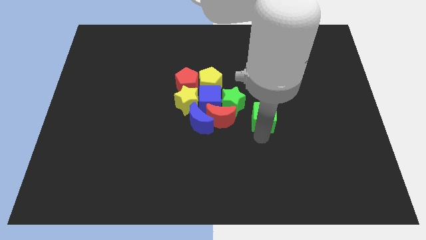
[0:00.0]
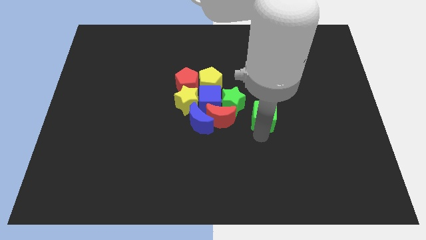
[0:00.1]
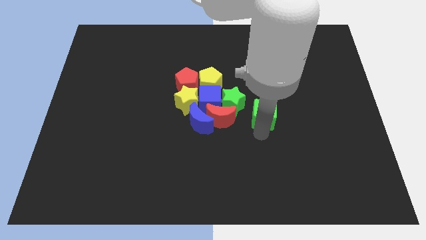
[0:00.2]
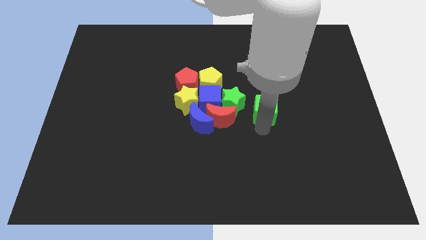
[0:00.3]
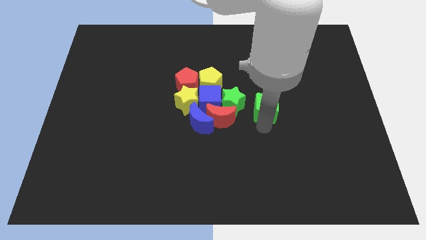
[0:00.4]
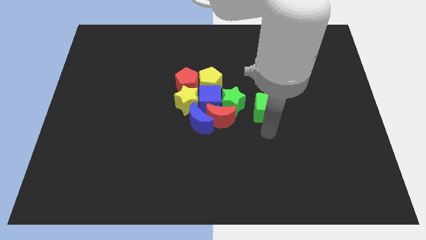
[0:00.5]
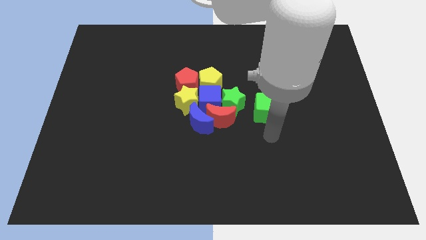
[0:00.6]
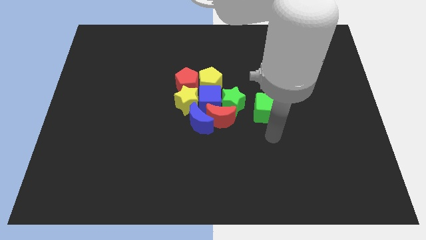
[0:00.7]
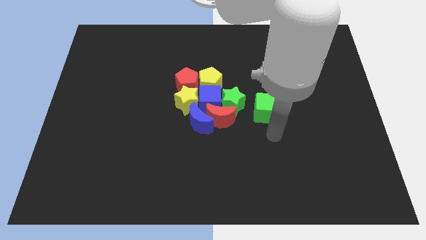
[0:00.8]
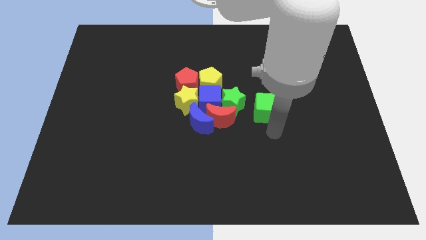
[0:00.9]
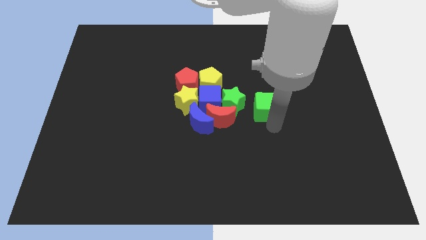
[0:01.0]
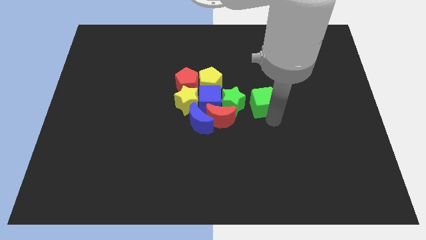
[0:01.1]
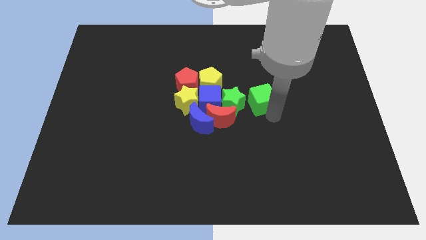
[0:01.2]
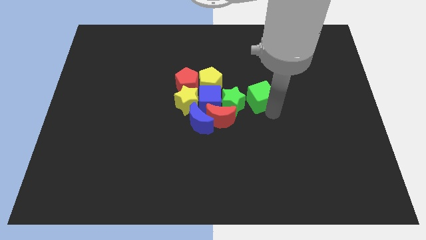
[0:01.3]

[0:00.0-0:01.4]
move the green cube right side of the green star

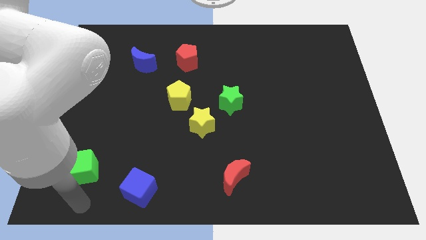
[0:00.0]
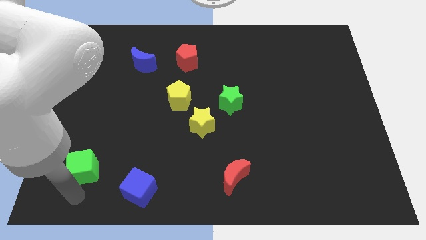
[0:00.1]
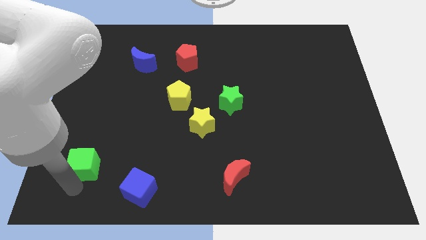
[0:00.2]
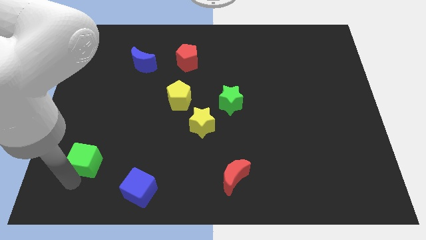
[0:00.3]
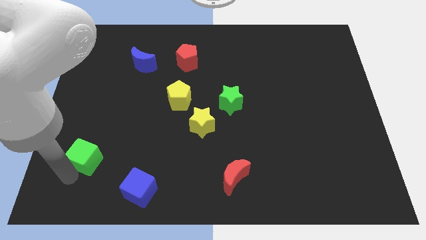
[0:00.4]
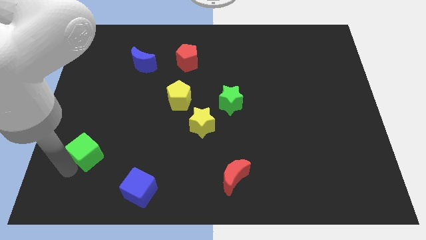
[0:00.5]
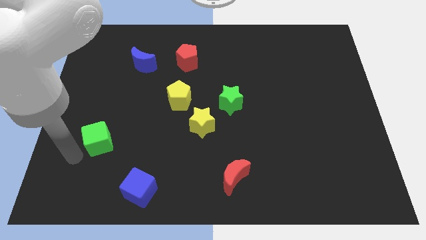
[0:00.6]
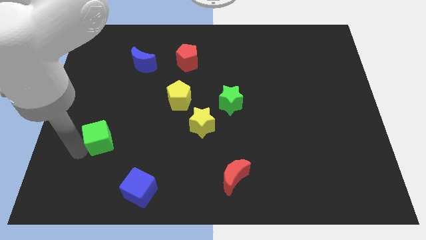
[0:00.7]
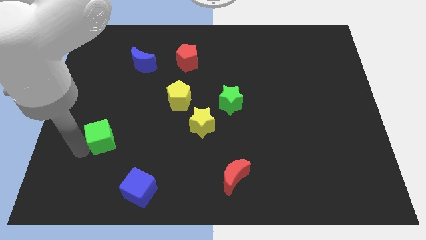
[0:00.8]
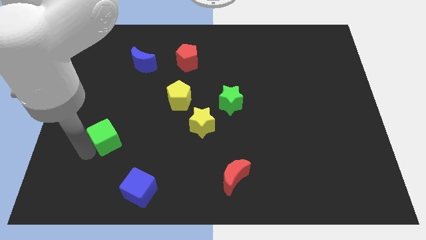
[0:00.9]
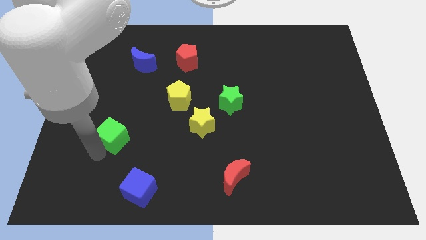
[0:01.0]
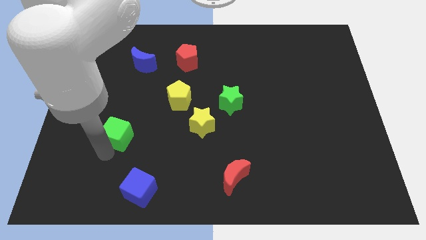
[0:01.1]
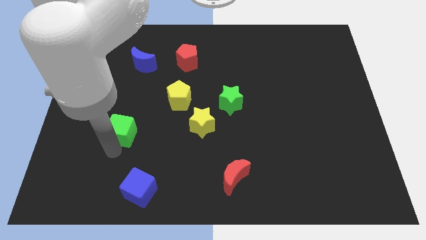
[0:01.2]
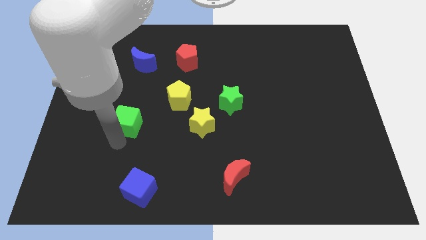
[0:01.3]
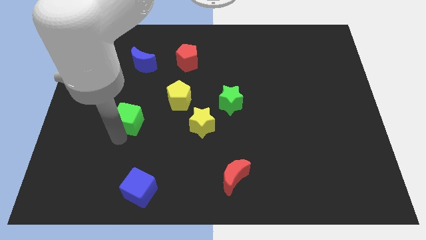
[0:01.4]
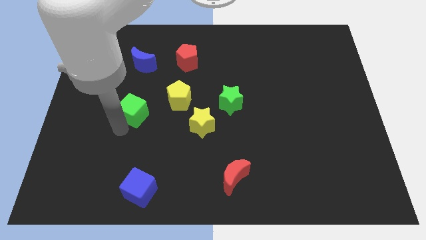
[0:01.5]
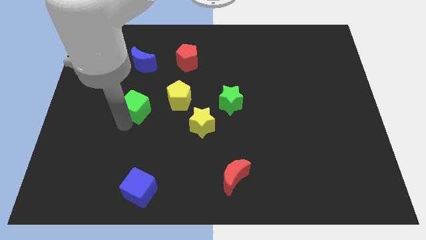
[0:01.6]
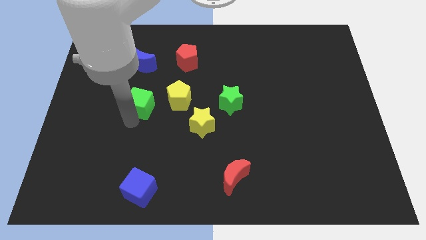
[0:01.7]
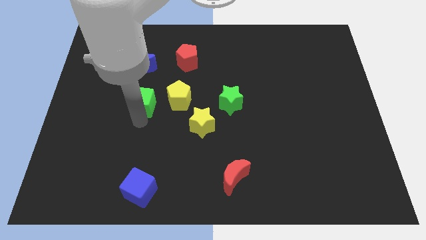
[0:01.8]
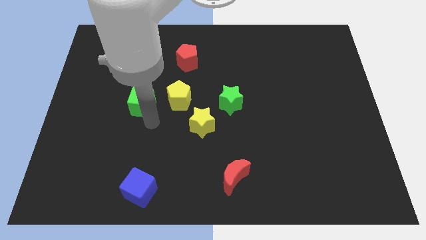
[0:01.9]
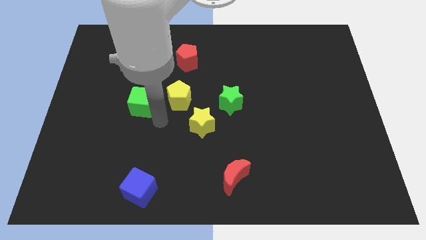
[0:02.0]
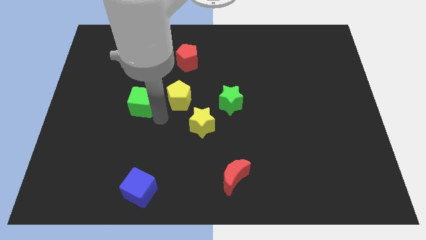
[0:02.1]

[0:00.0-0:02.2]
place the green cube parallel to yellow pentagon

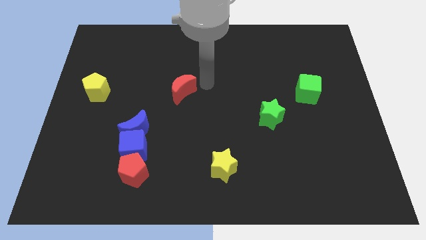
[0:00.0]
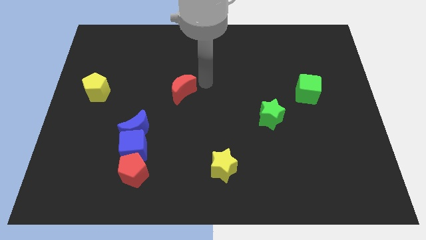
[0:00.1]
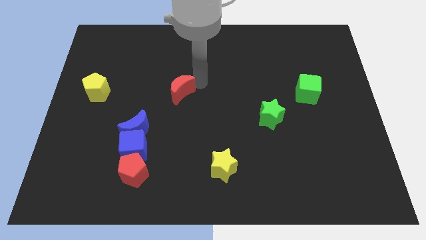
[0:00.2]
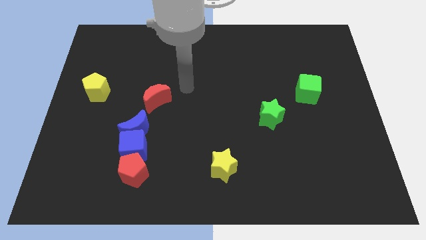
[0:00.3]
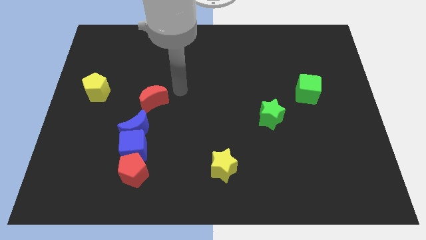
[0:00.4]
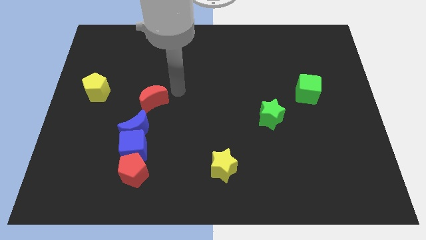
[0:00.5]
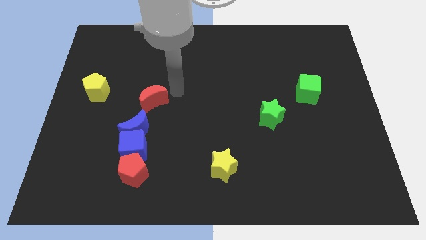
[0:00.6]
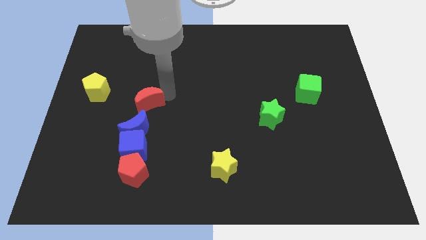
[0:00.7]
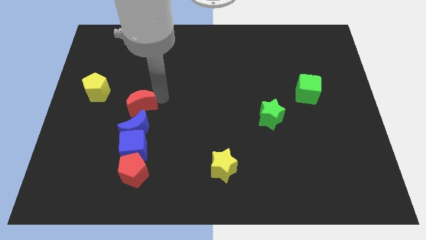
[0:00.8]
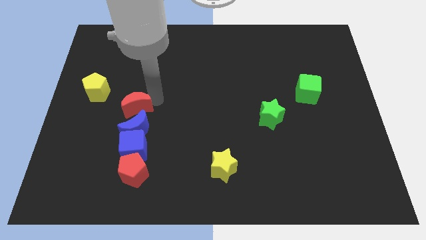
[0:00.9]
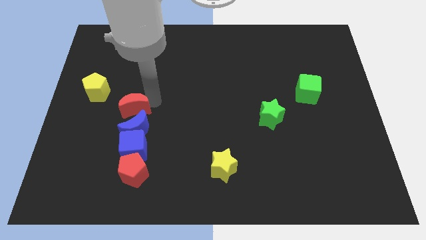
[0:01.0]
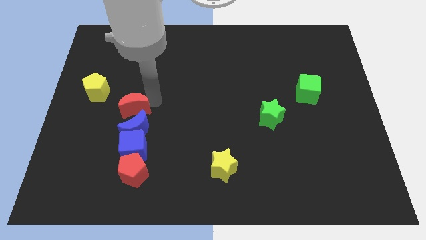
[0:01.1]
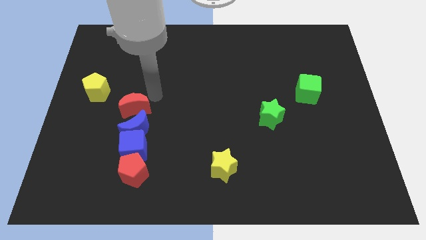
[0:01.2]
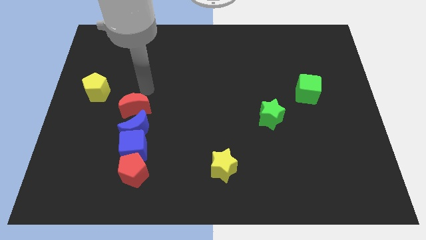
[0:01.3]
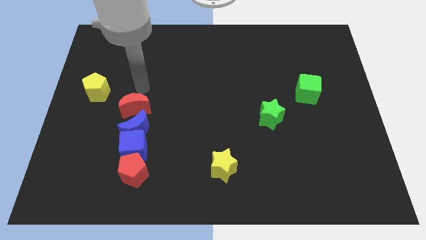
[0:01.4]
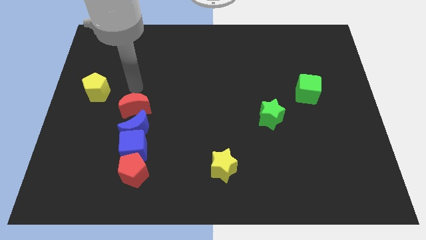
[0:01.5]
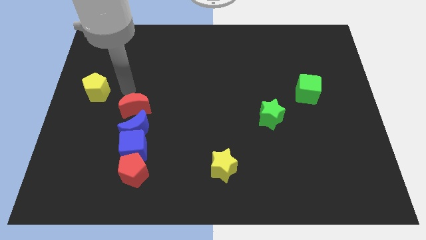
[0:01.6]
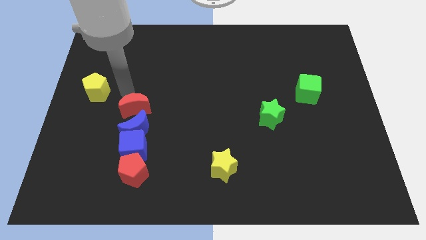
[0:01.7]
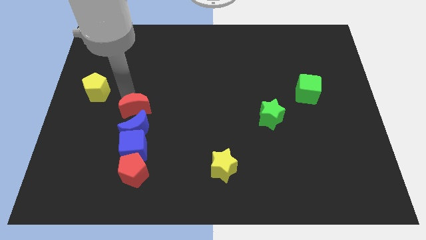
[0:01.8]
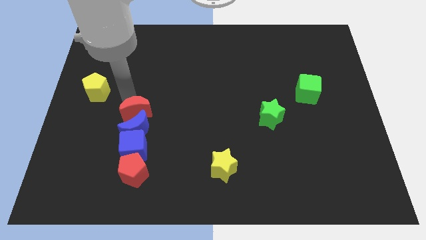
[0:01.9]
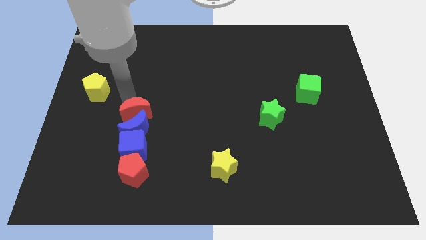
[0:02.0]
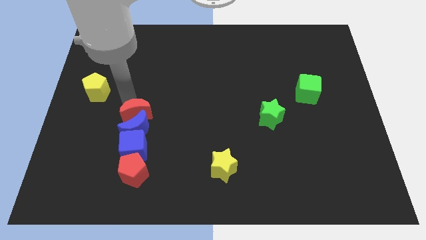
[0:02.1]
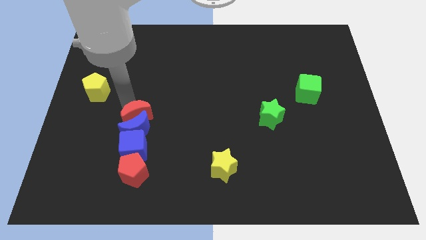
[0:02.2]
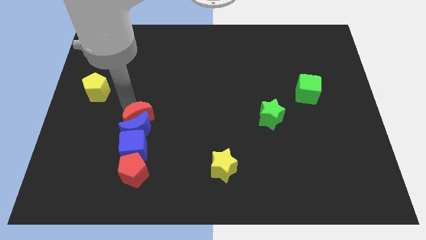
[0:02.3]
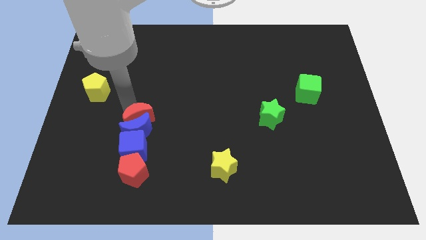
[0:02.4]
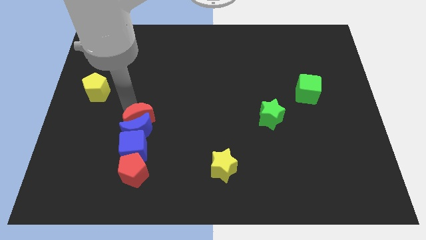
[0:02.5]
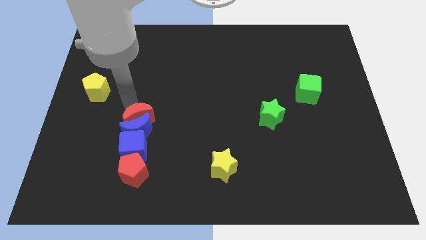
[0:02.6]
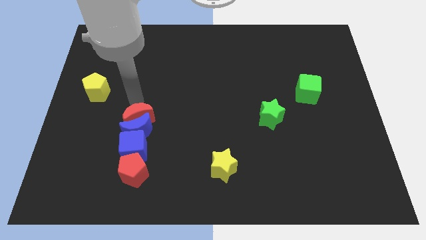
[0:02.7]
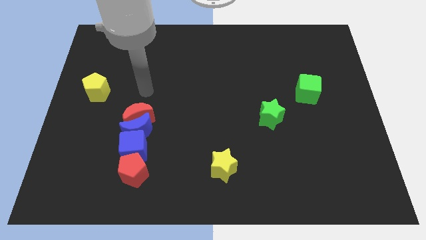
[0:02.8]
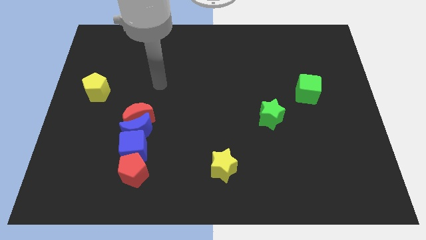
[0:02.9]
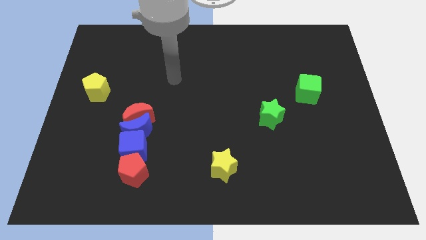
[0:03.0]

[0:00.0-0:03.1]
push the red crescent above blue moon

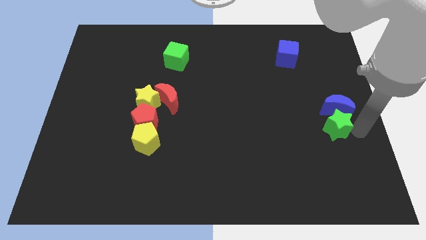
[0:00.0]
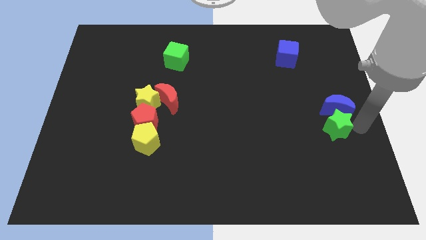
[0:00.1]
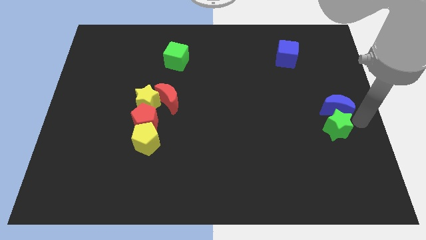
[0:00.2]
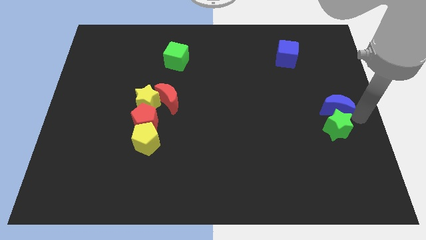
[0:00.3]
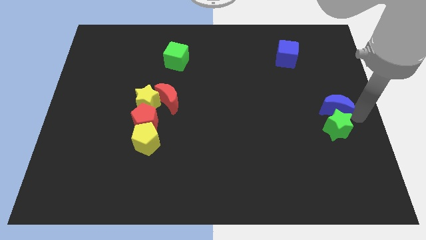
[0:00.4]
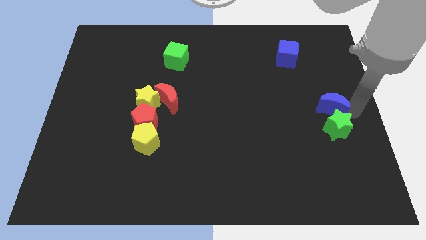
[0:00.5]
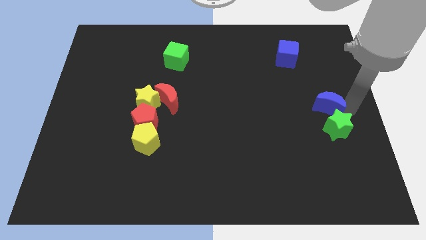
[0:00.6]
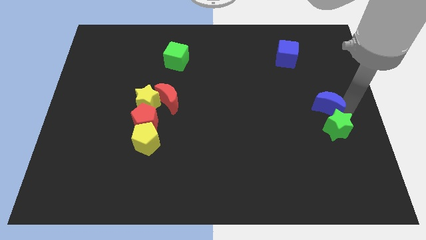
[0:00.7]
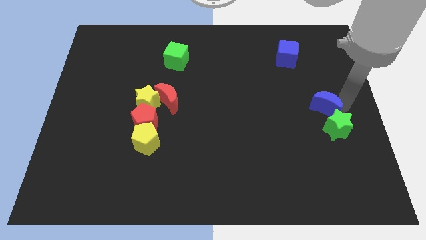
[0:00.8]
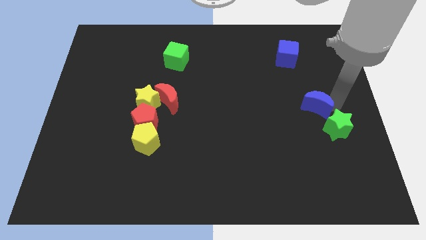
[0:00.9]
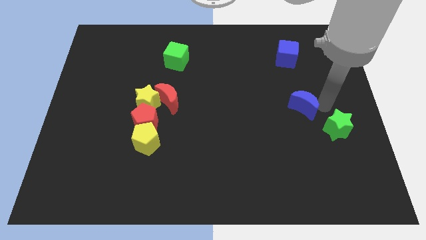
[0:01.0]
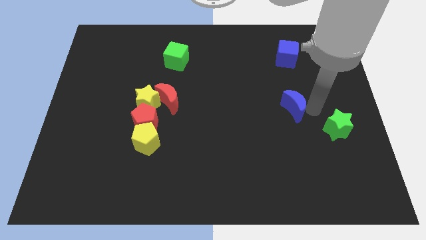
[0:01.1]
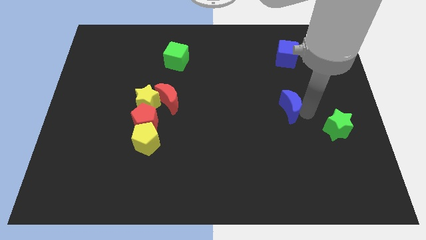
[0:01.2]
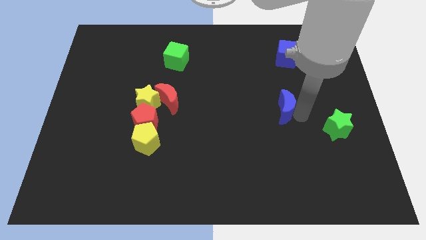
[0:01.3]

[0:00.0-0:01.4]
push the blue crescent slightly away from the green star

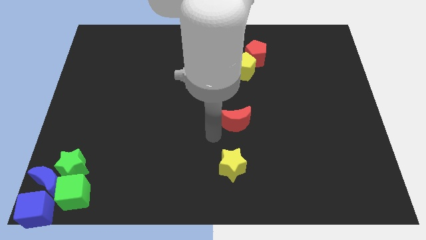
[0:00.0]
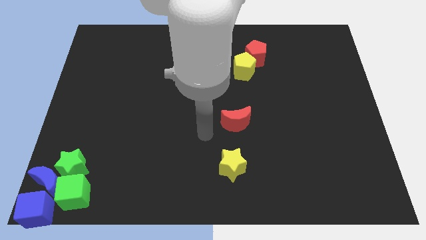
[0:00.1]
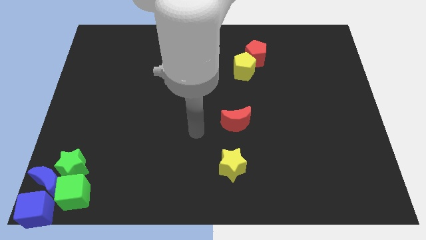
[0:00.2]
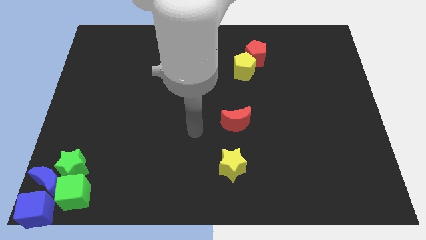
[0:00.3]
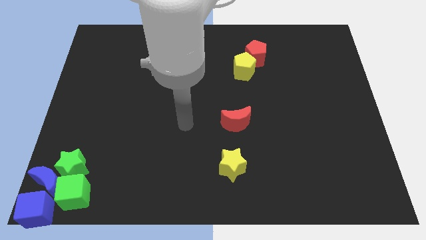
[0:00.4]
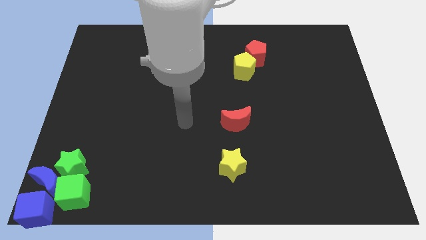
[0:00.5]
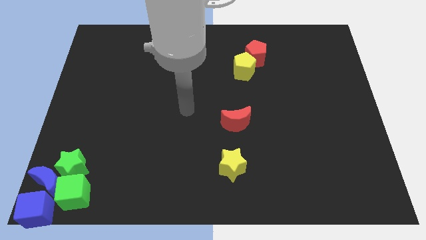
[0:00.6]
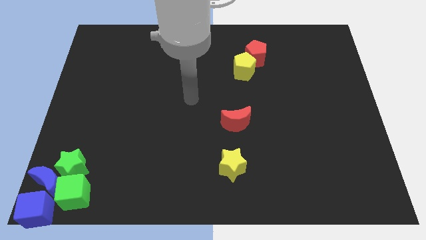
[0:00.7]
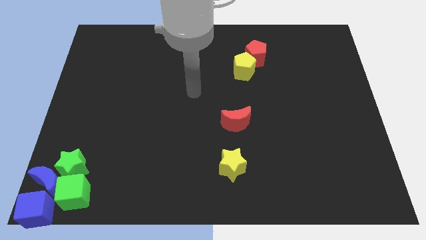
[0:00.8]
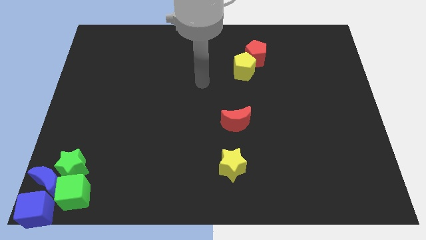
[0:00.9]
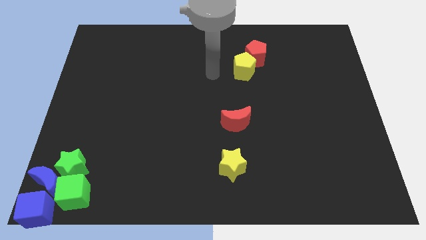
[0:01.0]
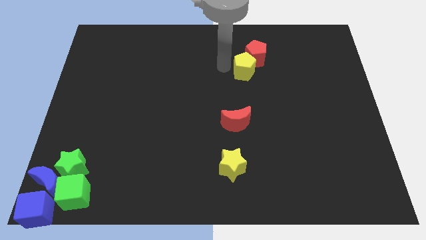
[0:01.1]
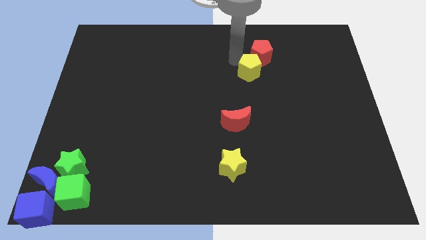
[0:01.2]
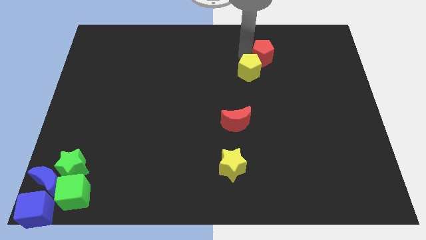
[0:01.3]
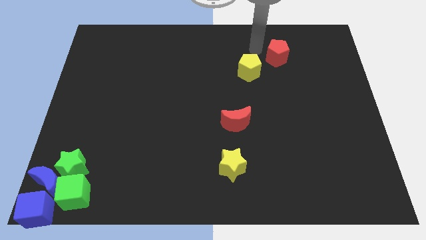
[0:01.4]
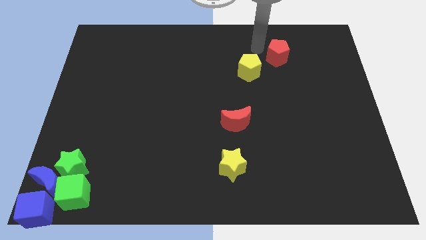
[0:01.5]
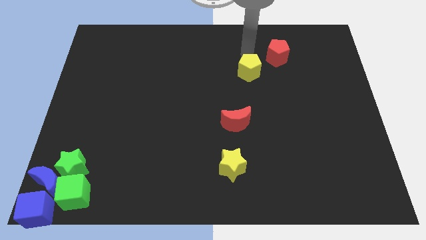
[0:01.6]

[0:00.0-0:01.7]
separate the red pentagon from the yellow pentagon
